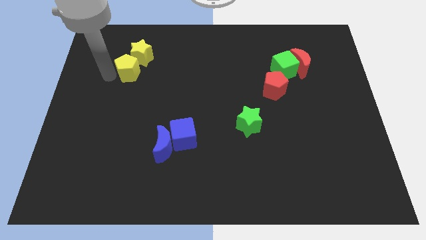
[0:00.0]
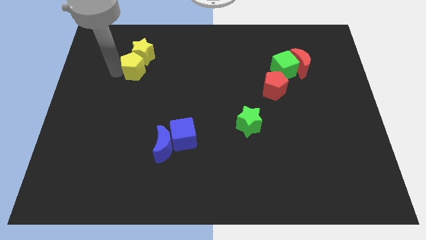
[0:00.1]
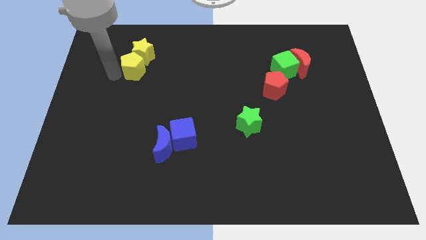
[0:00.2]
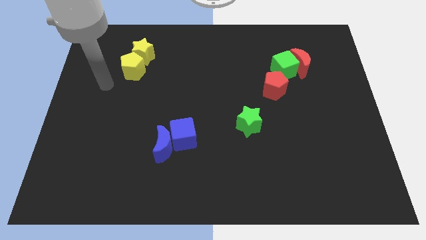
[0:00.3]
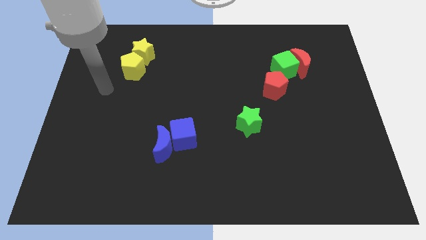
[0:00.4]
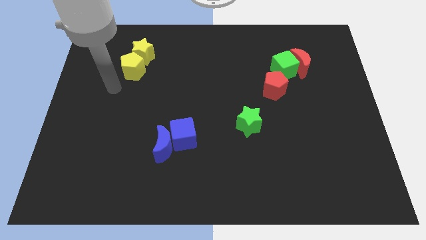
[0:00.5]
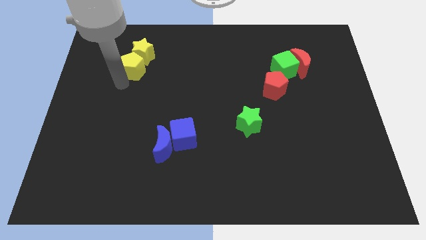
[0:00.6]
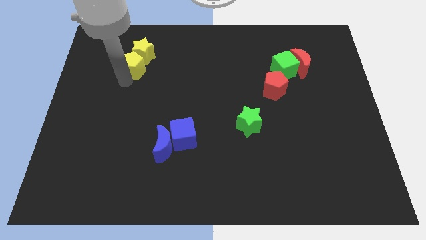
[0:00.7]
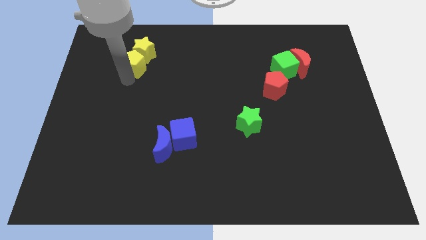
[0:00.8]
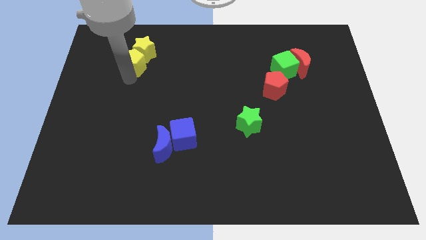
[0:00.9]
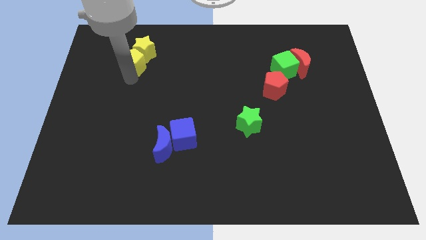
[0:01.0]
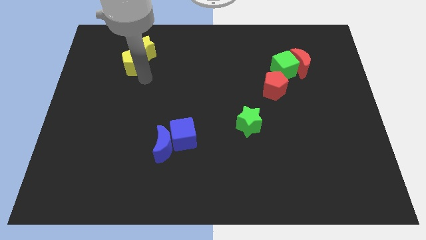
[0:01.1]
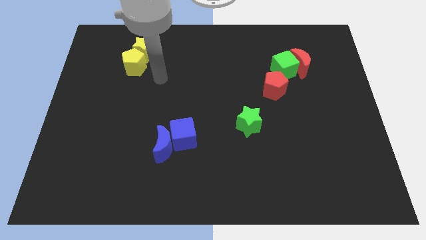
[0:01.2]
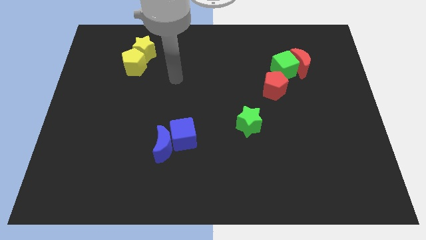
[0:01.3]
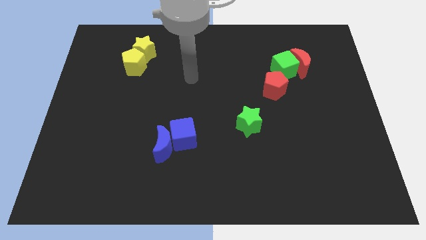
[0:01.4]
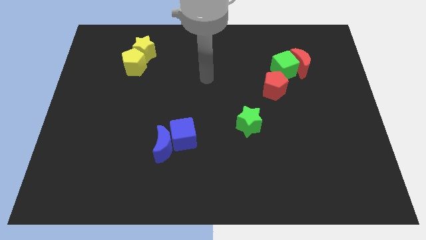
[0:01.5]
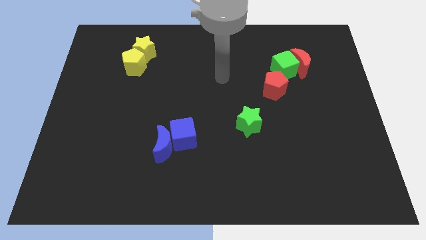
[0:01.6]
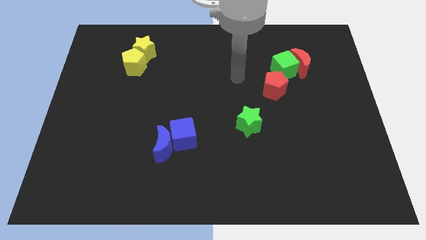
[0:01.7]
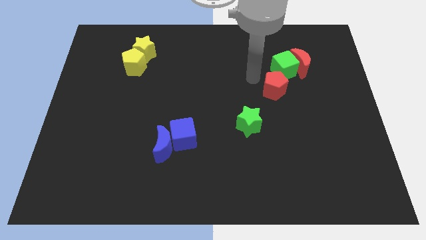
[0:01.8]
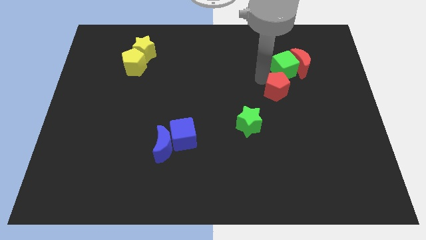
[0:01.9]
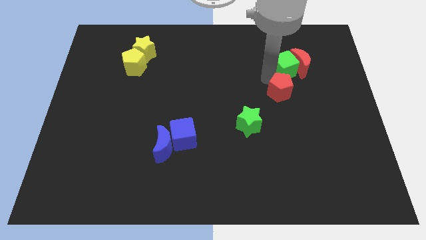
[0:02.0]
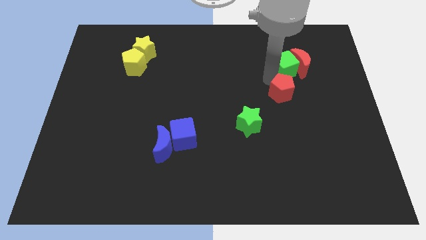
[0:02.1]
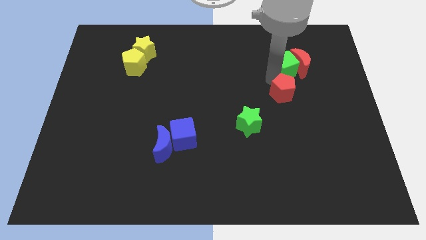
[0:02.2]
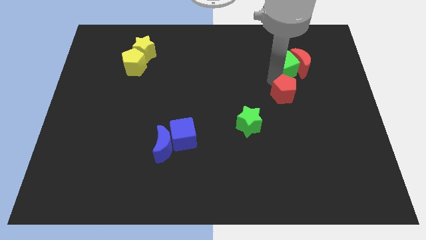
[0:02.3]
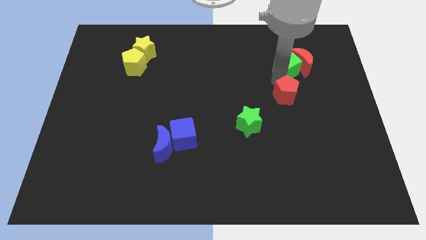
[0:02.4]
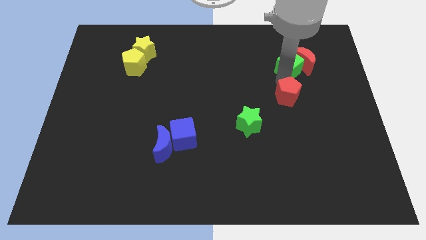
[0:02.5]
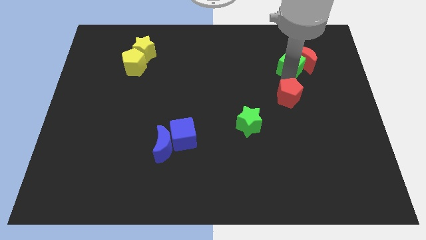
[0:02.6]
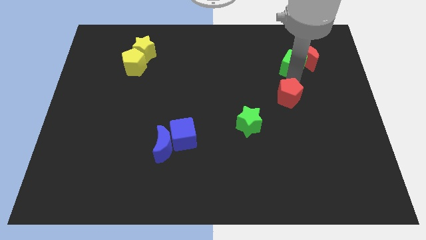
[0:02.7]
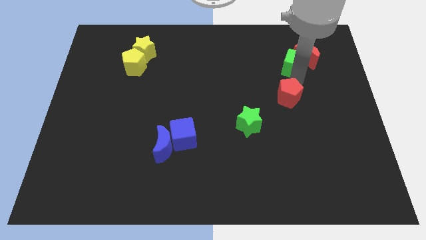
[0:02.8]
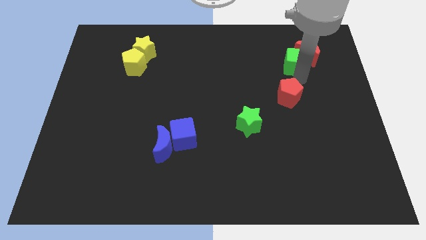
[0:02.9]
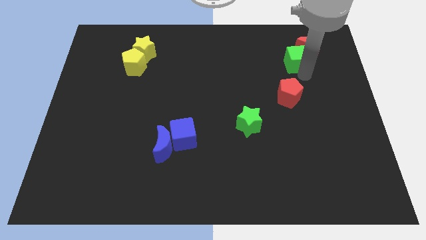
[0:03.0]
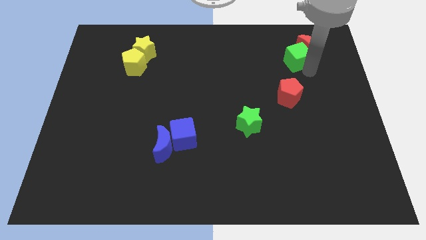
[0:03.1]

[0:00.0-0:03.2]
push the red crescent with the green cube towards top right of the board

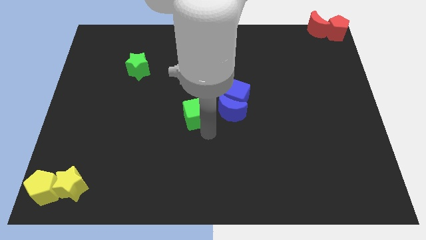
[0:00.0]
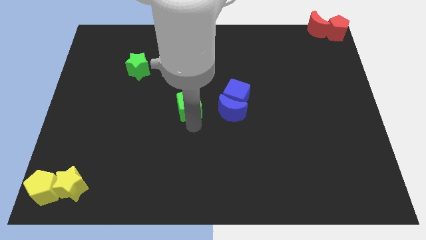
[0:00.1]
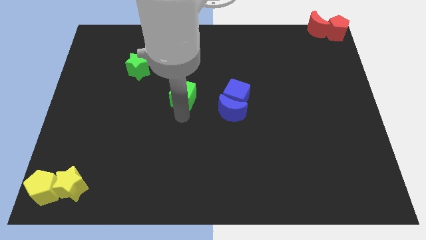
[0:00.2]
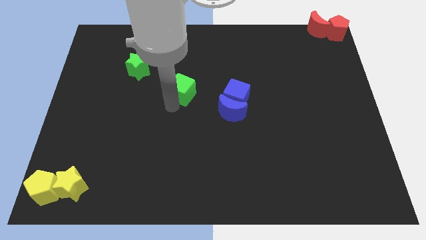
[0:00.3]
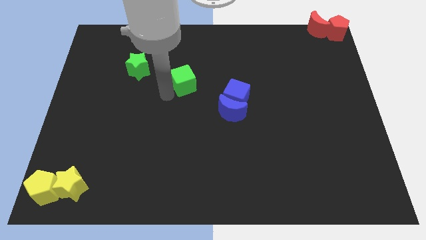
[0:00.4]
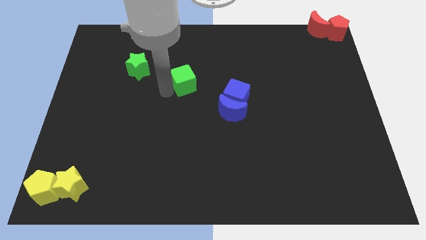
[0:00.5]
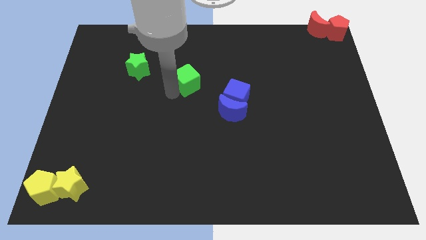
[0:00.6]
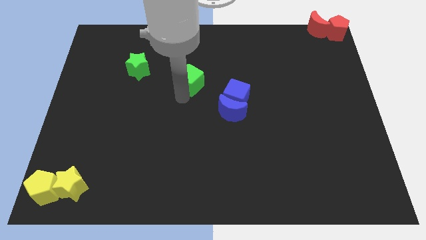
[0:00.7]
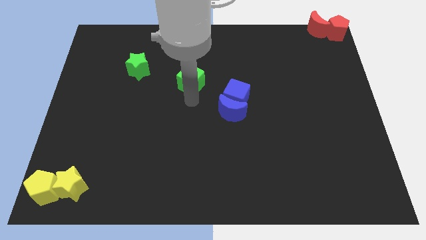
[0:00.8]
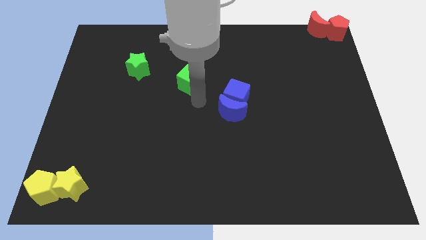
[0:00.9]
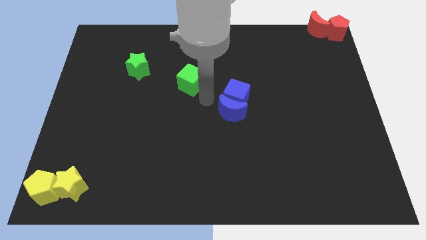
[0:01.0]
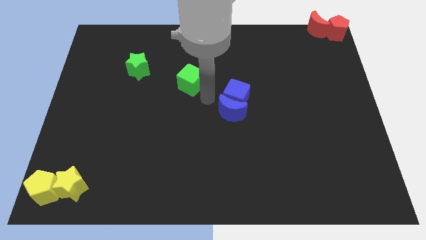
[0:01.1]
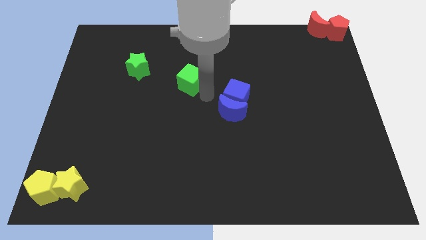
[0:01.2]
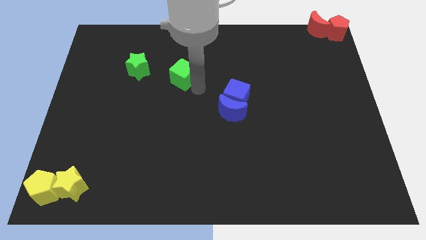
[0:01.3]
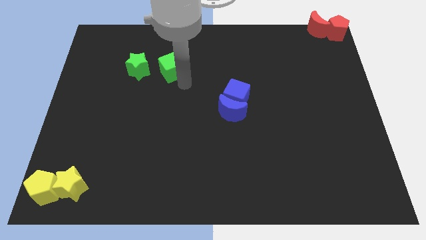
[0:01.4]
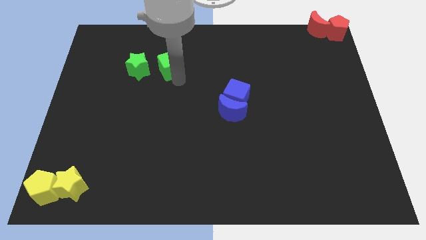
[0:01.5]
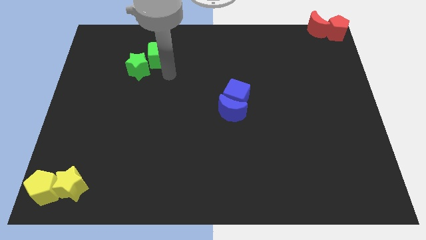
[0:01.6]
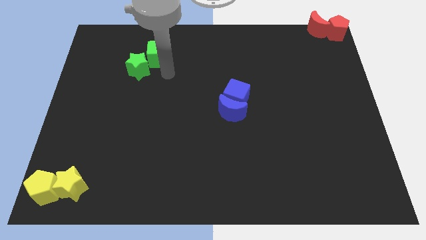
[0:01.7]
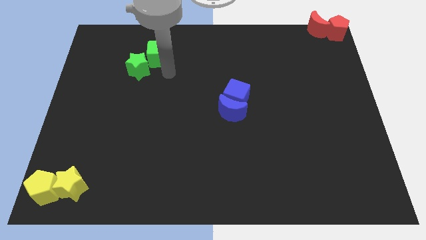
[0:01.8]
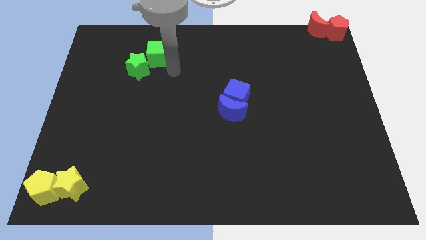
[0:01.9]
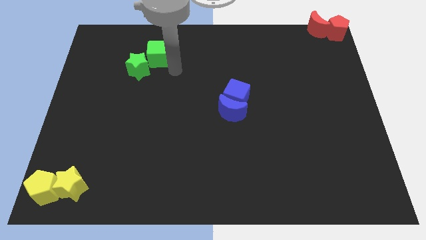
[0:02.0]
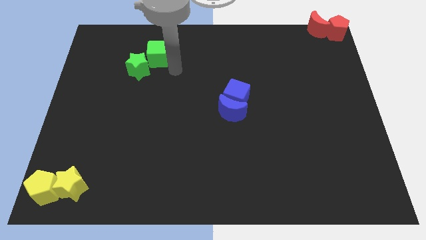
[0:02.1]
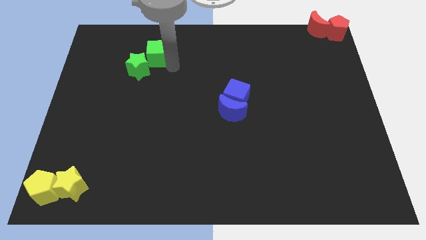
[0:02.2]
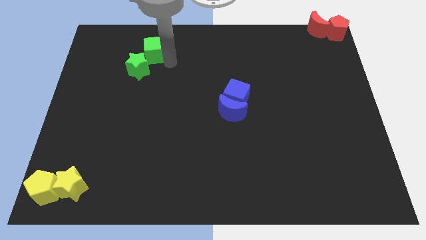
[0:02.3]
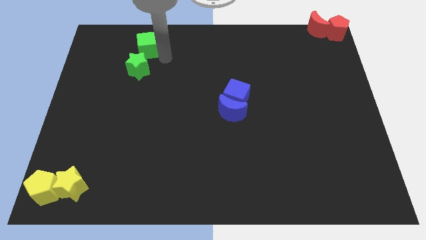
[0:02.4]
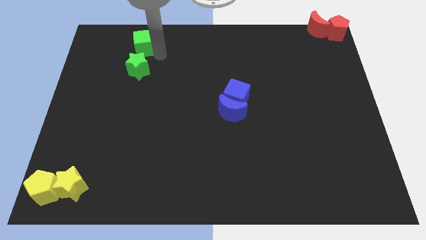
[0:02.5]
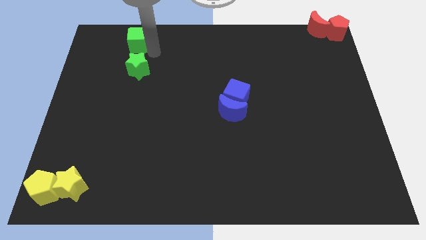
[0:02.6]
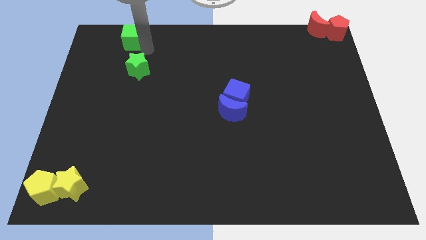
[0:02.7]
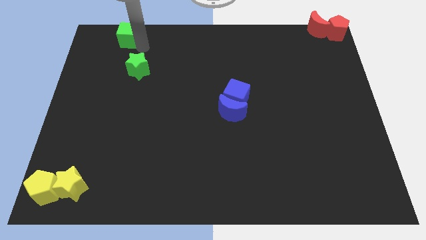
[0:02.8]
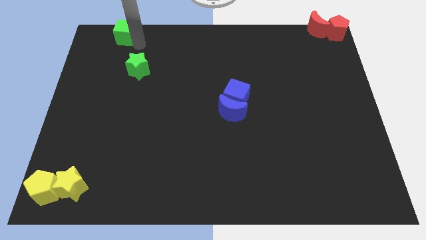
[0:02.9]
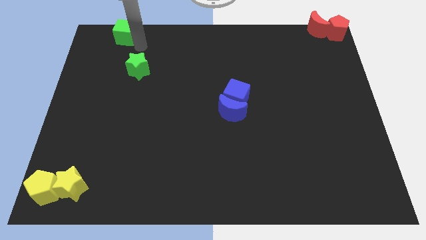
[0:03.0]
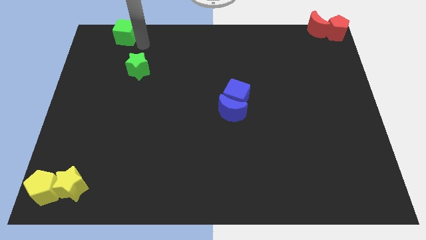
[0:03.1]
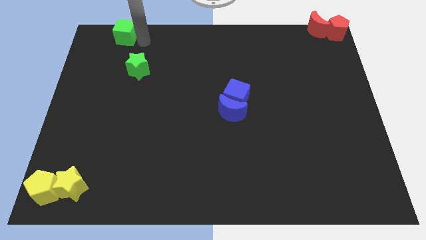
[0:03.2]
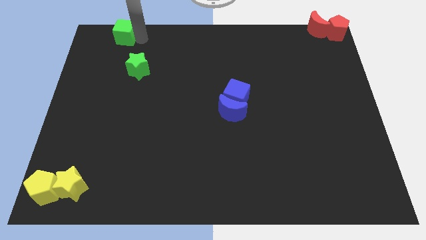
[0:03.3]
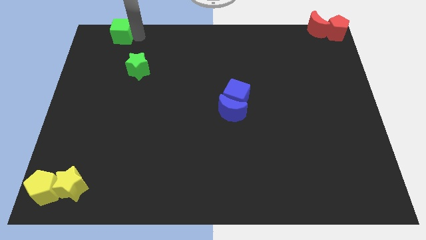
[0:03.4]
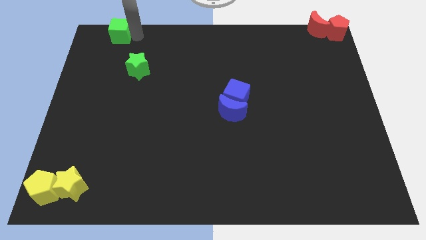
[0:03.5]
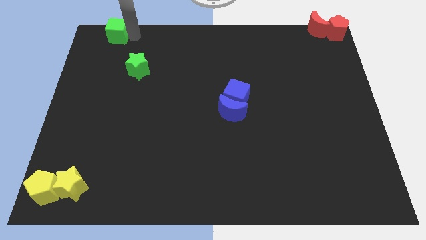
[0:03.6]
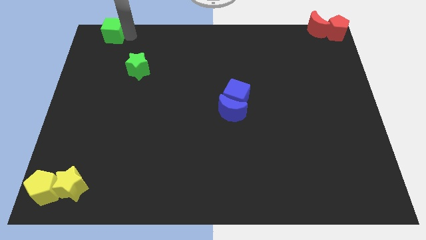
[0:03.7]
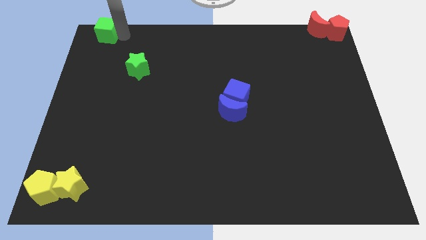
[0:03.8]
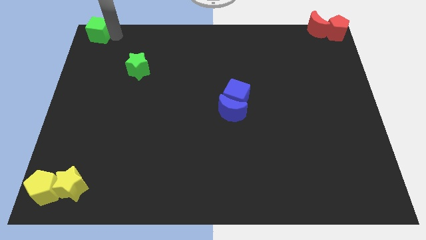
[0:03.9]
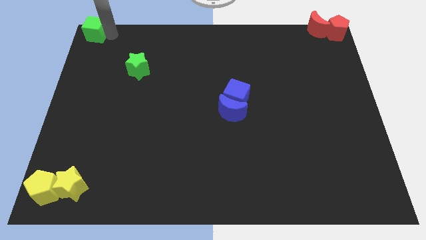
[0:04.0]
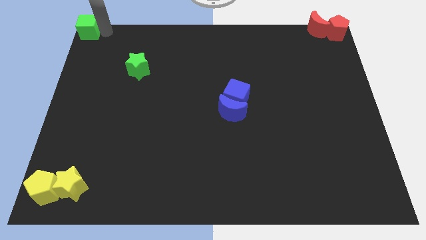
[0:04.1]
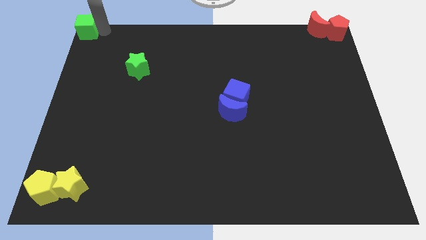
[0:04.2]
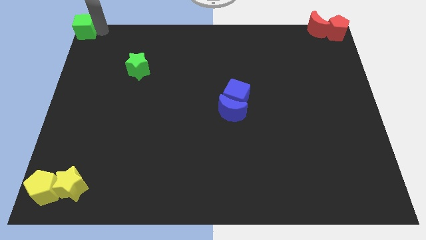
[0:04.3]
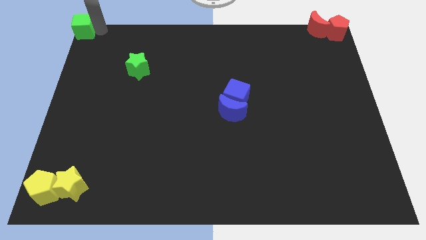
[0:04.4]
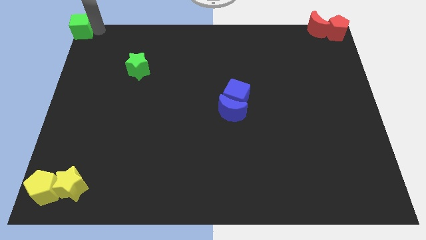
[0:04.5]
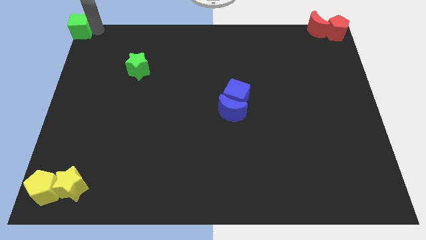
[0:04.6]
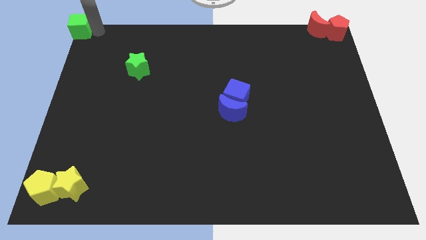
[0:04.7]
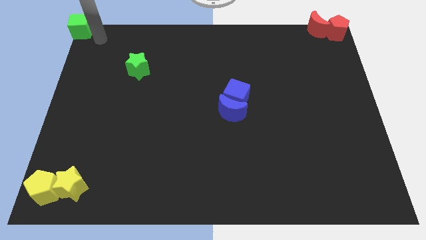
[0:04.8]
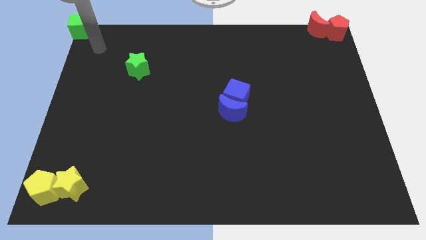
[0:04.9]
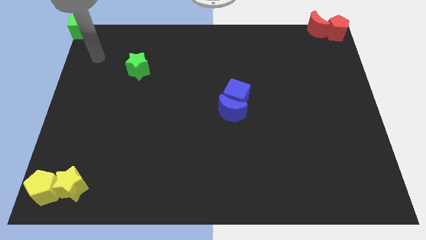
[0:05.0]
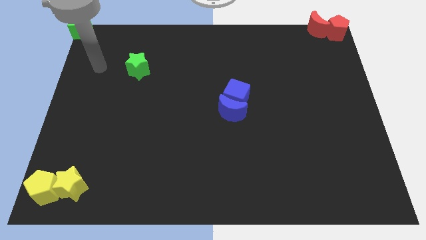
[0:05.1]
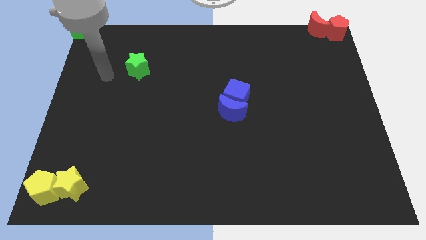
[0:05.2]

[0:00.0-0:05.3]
move the green cube to the top left corner of the board

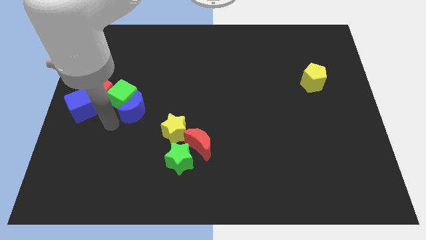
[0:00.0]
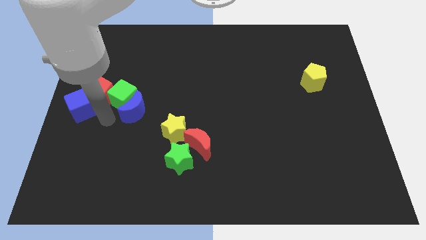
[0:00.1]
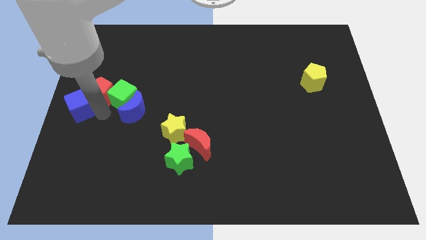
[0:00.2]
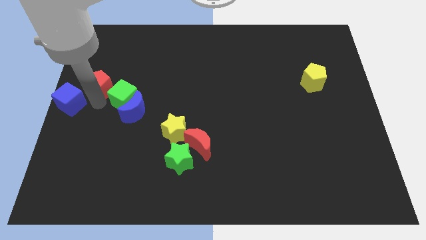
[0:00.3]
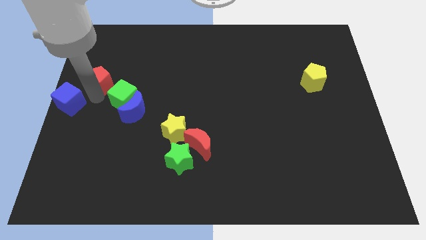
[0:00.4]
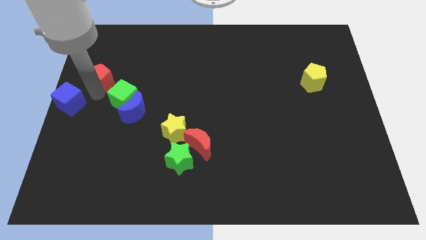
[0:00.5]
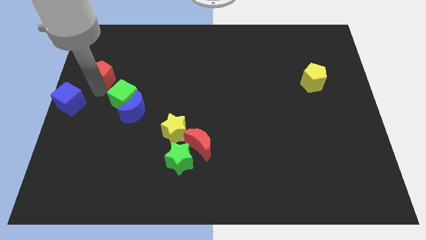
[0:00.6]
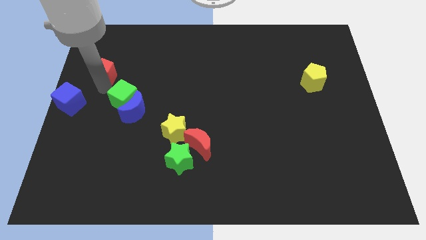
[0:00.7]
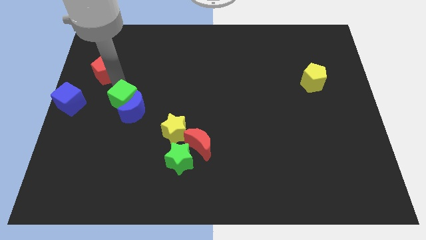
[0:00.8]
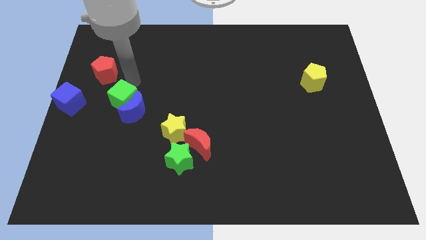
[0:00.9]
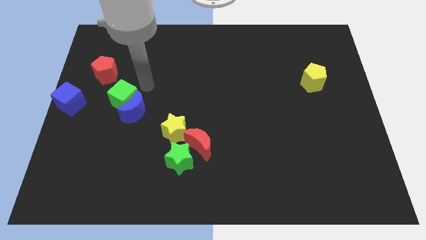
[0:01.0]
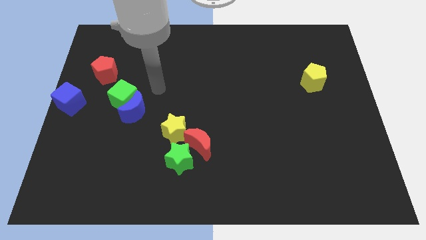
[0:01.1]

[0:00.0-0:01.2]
slide the red pentagon diagonally on the top right side of the blue cube
